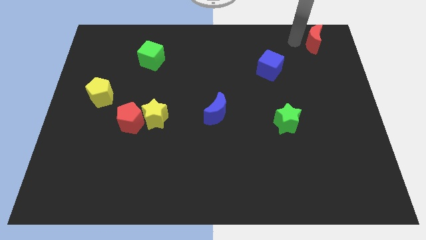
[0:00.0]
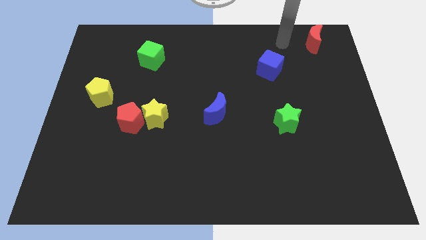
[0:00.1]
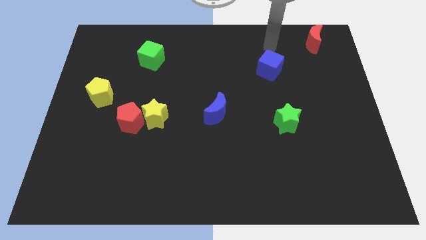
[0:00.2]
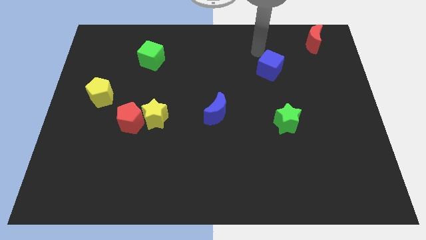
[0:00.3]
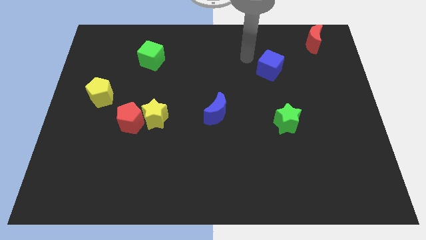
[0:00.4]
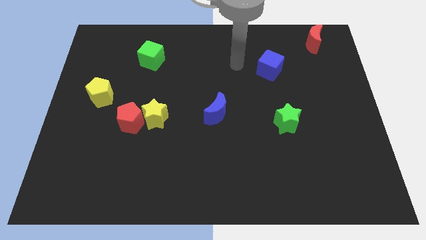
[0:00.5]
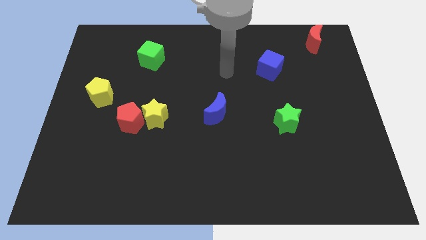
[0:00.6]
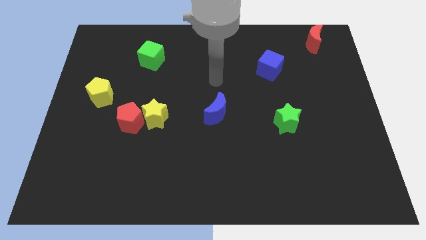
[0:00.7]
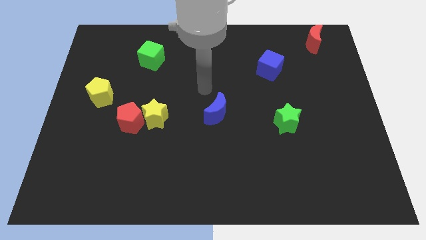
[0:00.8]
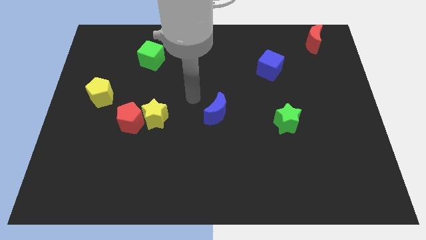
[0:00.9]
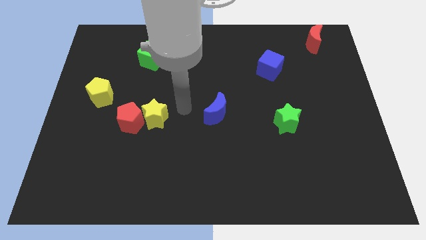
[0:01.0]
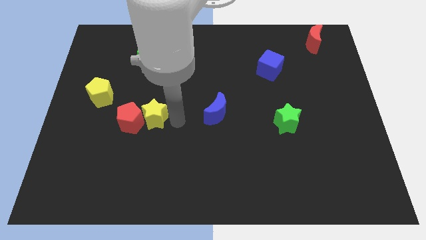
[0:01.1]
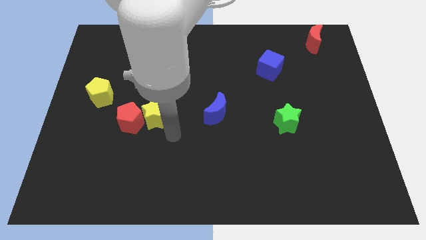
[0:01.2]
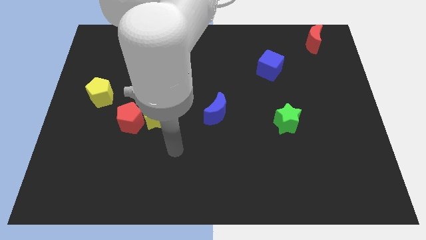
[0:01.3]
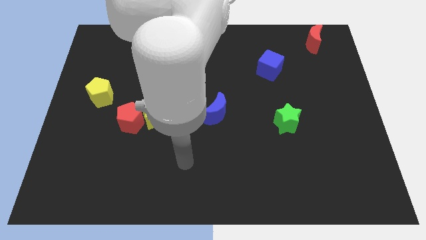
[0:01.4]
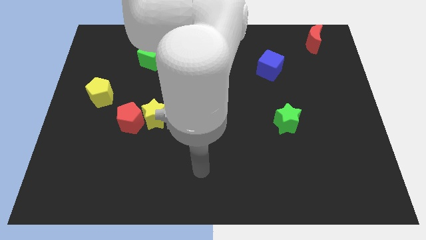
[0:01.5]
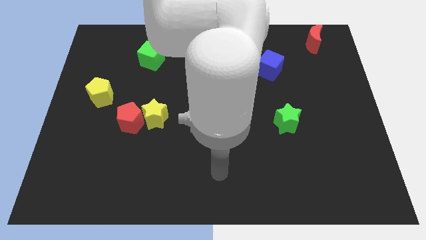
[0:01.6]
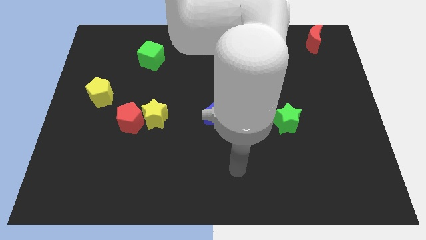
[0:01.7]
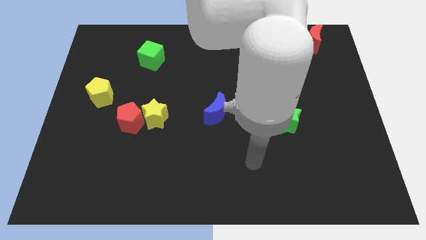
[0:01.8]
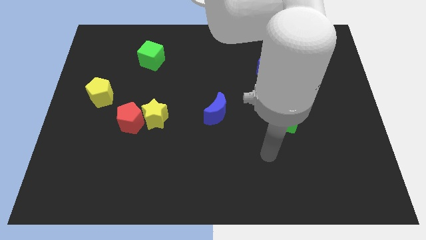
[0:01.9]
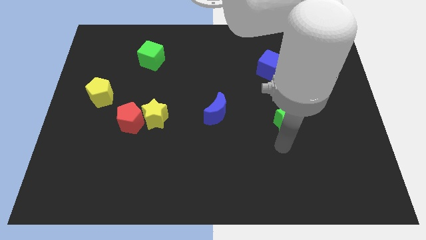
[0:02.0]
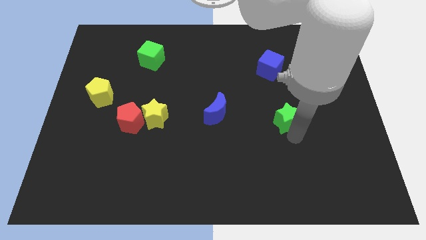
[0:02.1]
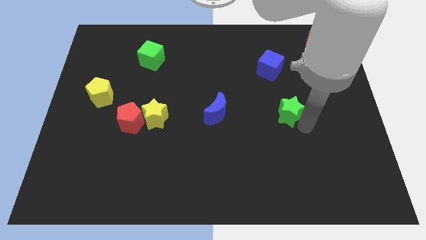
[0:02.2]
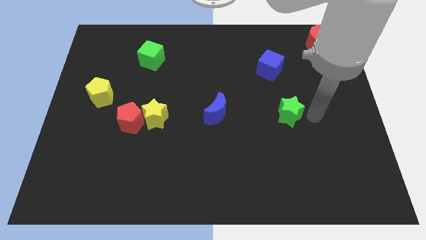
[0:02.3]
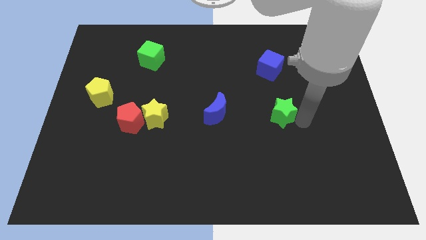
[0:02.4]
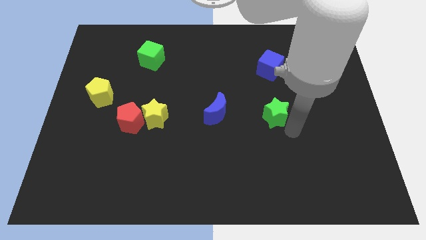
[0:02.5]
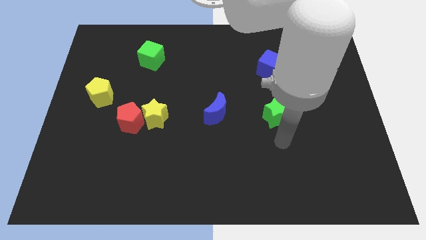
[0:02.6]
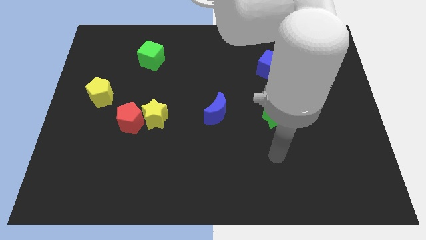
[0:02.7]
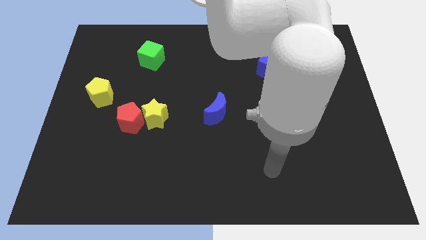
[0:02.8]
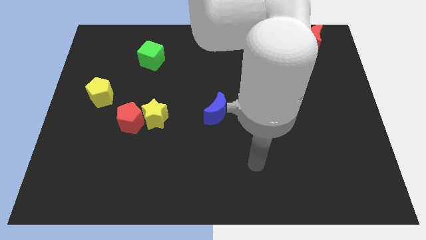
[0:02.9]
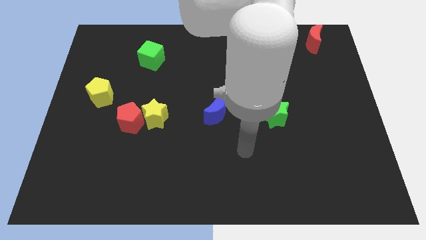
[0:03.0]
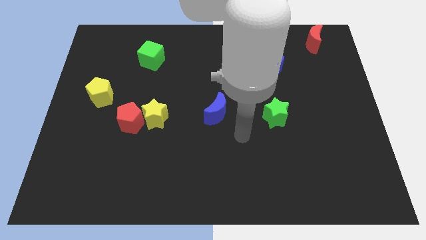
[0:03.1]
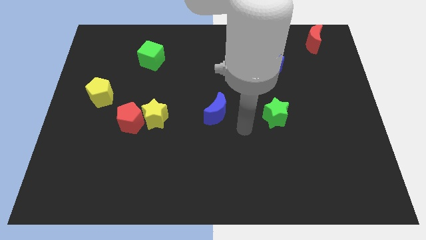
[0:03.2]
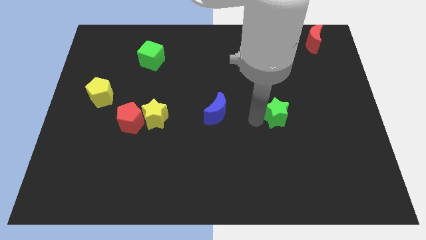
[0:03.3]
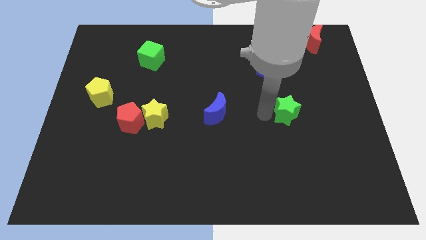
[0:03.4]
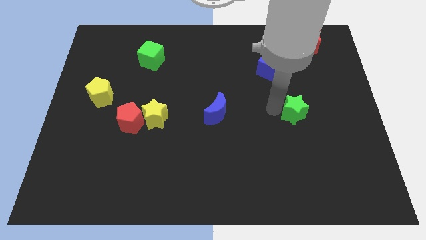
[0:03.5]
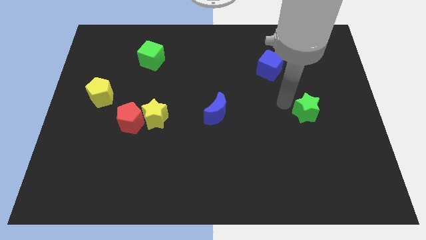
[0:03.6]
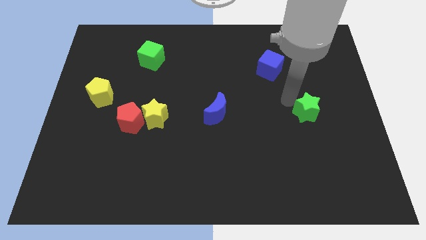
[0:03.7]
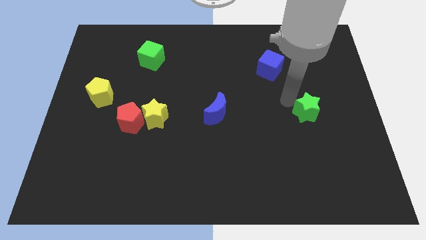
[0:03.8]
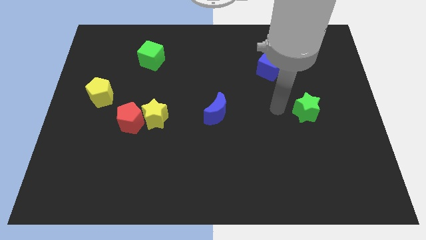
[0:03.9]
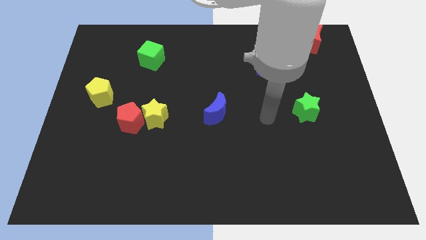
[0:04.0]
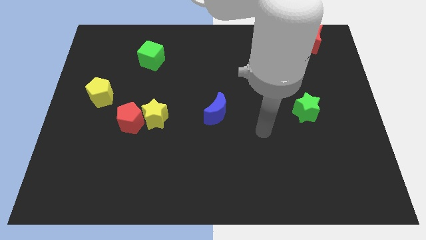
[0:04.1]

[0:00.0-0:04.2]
move the green star towards the center right

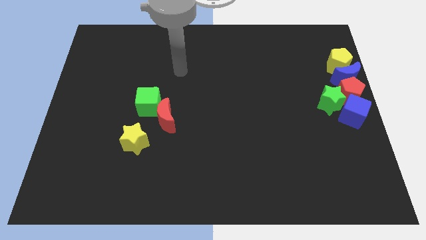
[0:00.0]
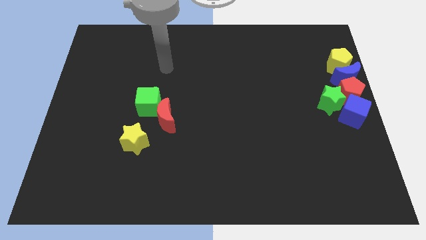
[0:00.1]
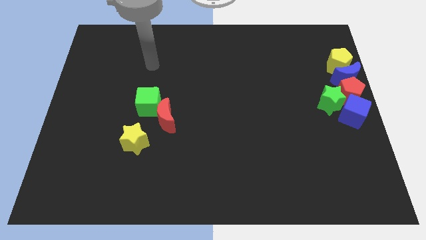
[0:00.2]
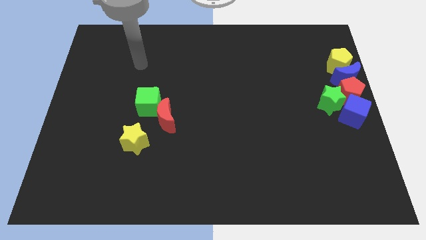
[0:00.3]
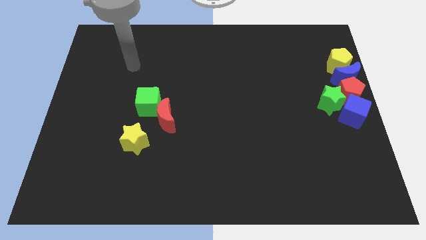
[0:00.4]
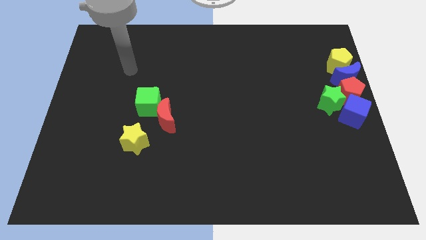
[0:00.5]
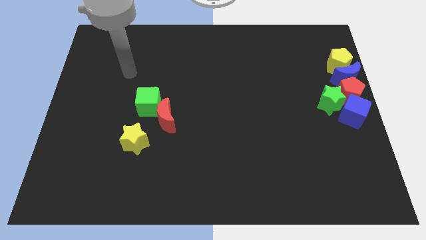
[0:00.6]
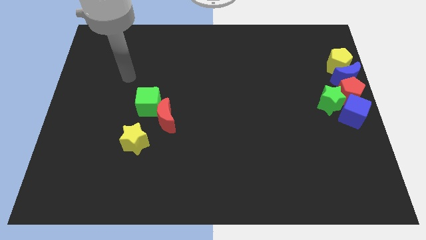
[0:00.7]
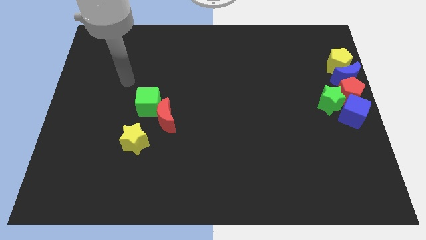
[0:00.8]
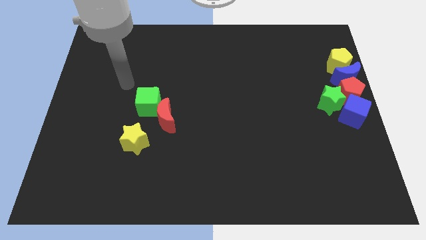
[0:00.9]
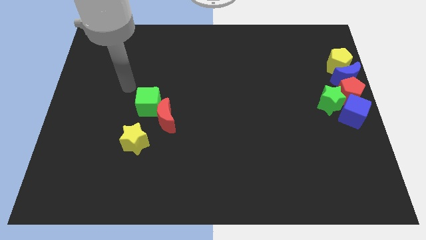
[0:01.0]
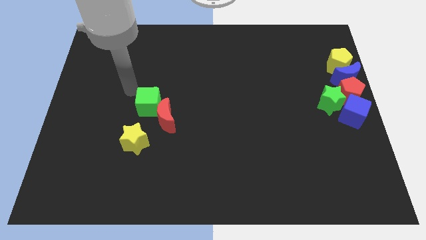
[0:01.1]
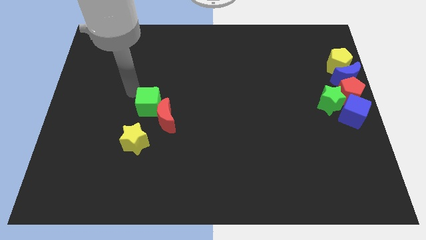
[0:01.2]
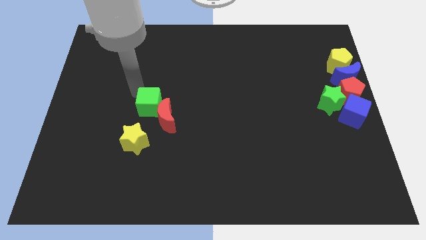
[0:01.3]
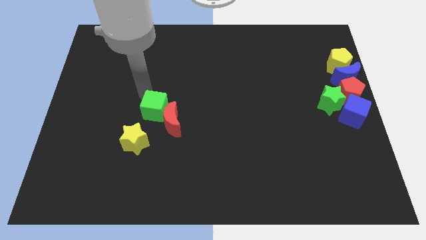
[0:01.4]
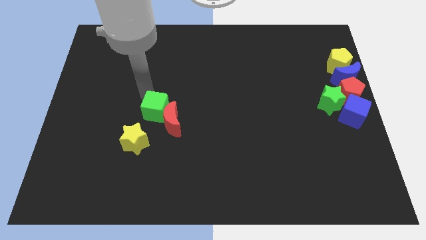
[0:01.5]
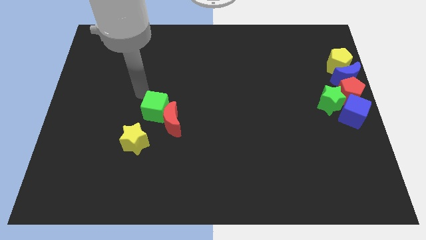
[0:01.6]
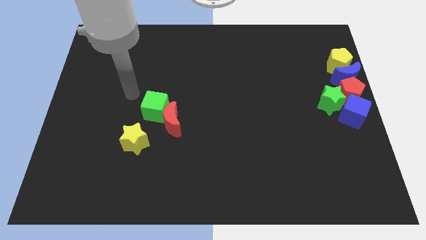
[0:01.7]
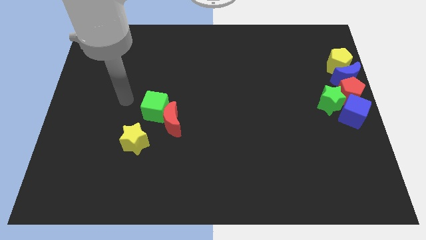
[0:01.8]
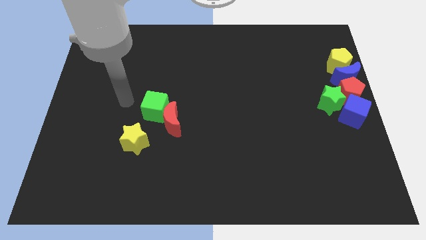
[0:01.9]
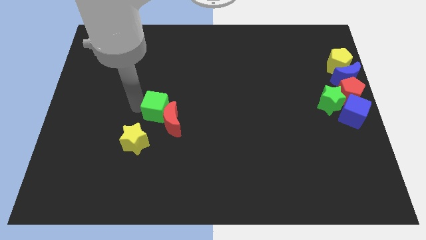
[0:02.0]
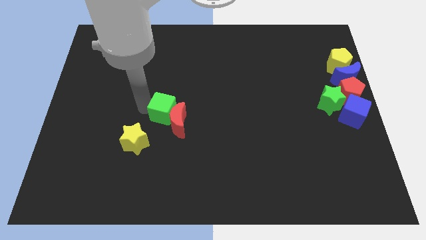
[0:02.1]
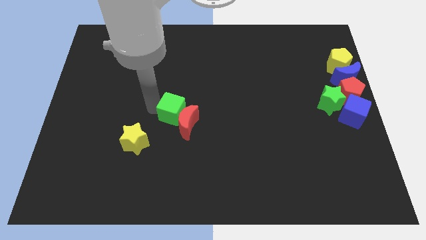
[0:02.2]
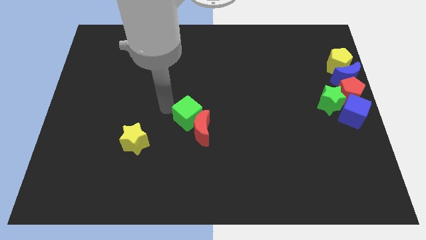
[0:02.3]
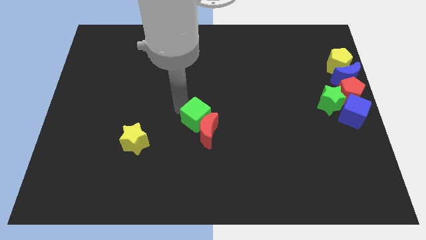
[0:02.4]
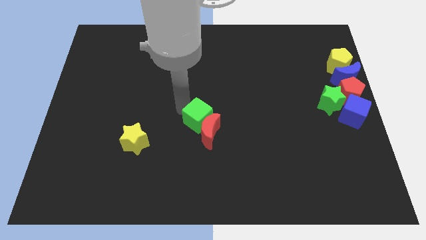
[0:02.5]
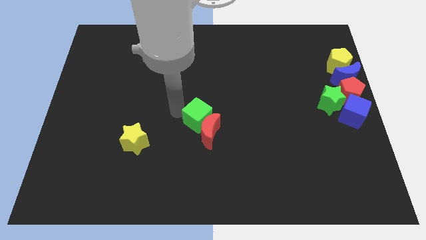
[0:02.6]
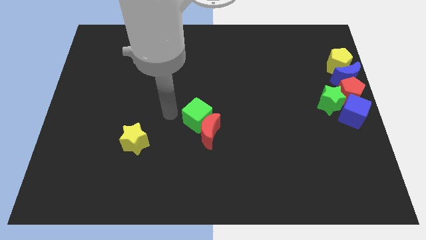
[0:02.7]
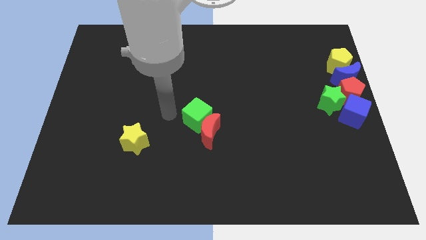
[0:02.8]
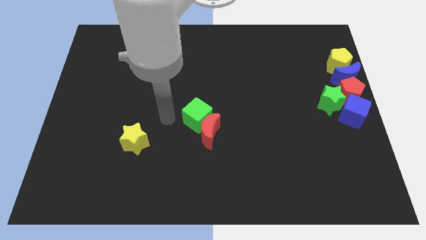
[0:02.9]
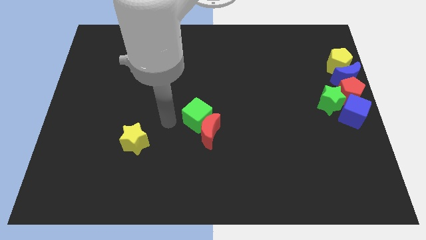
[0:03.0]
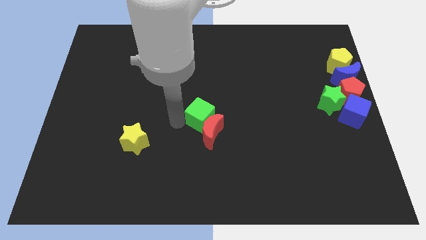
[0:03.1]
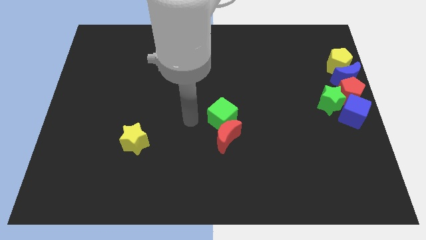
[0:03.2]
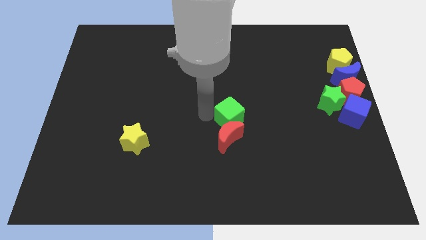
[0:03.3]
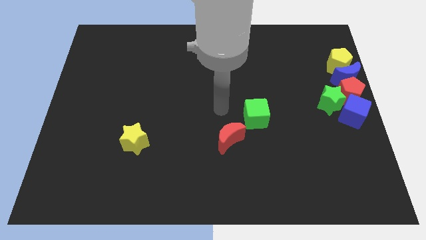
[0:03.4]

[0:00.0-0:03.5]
place the green cube and red moon towards center

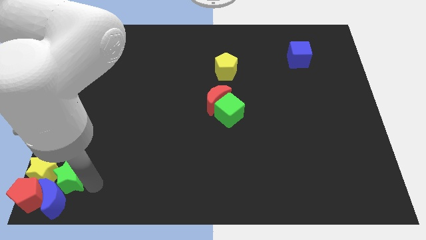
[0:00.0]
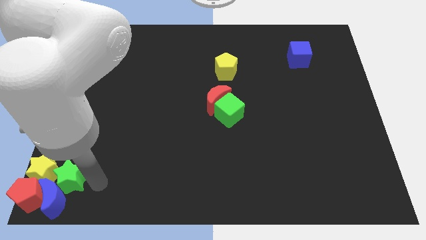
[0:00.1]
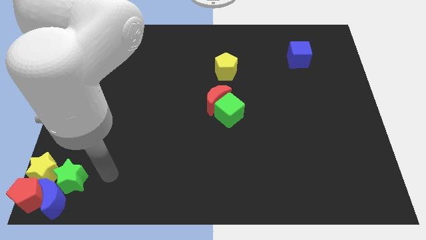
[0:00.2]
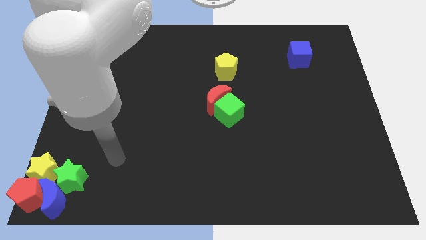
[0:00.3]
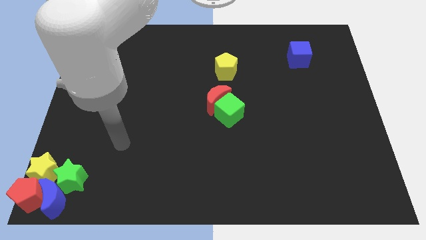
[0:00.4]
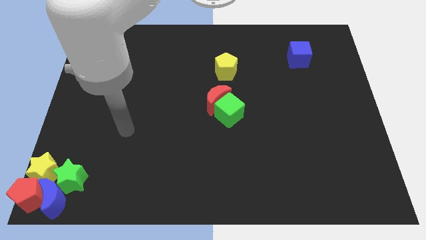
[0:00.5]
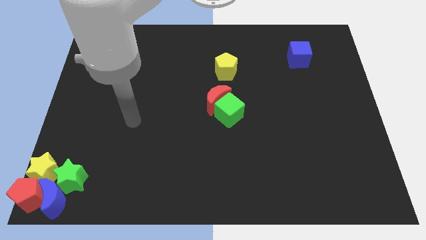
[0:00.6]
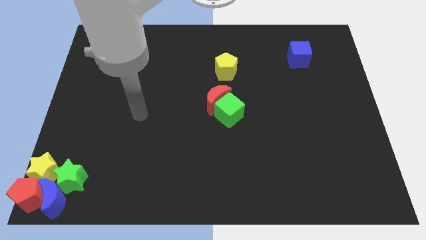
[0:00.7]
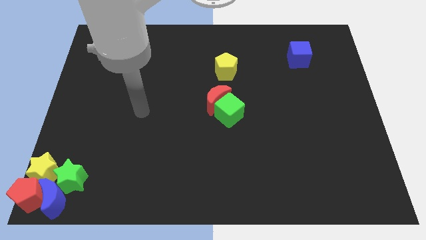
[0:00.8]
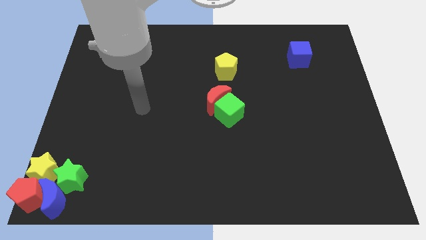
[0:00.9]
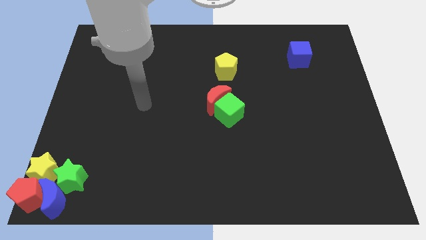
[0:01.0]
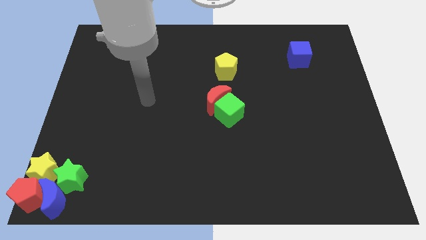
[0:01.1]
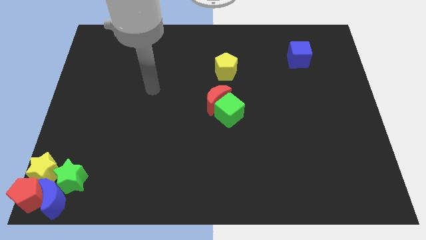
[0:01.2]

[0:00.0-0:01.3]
move your arm away from green star

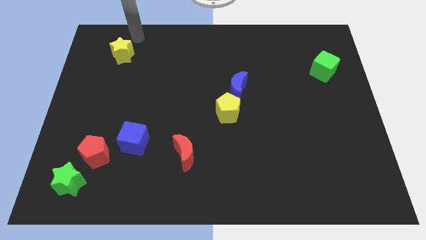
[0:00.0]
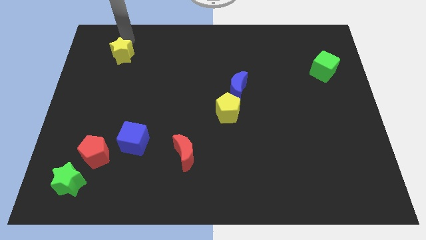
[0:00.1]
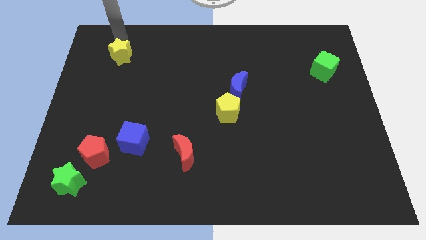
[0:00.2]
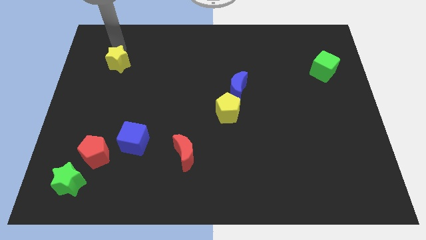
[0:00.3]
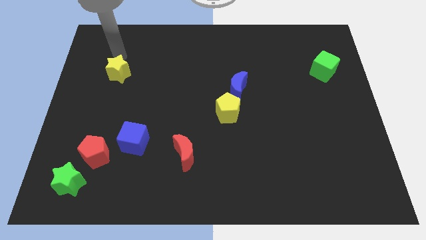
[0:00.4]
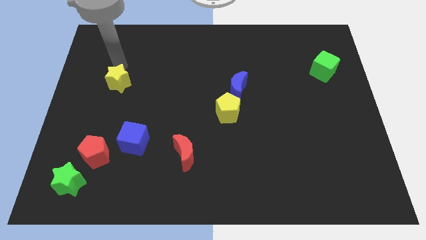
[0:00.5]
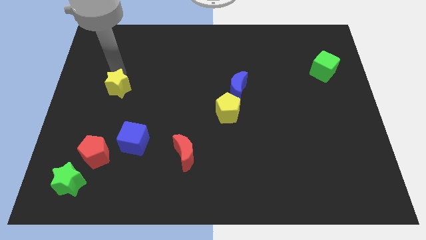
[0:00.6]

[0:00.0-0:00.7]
push the yellow star to the bottom of the board
